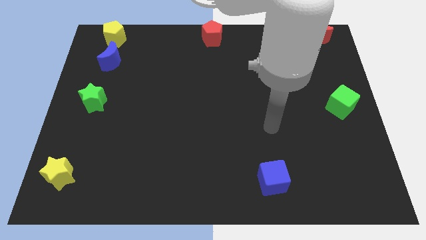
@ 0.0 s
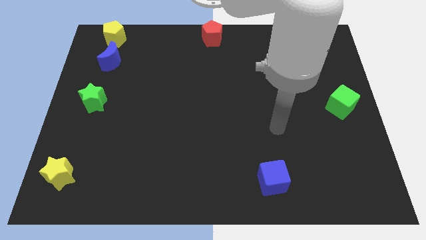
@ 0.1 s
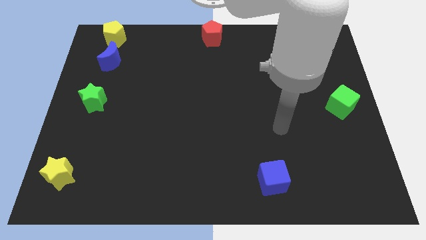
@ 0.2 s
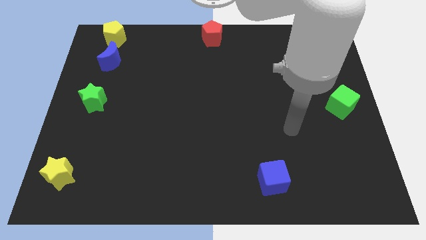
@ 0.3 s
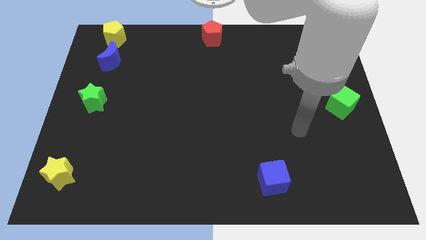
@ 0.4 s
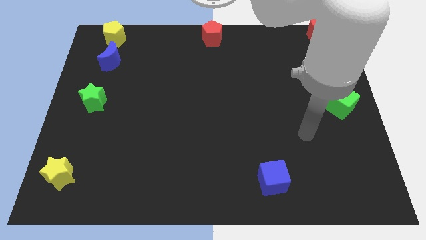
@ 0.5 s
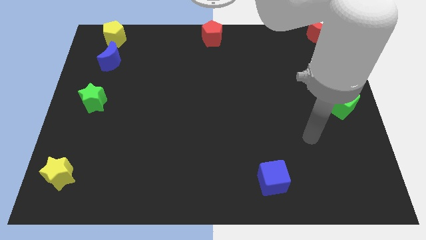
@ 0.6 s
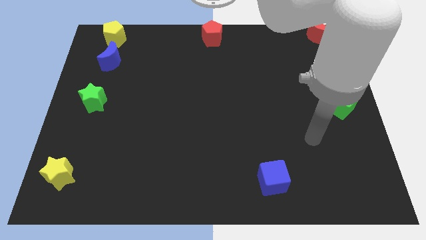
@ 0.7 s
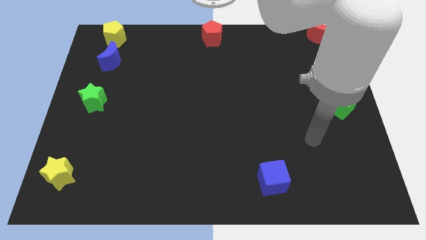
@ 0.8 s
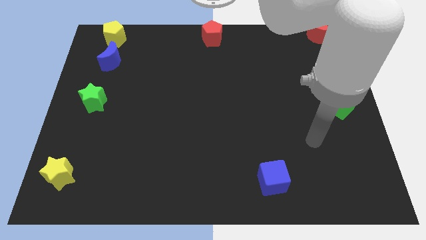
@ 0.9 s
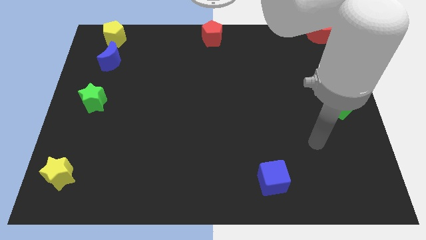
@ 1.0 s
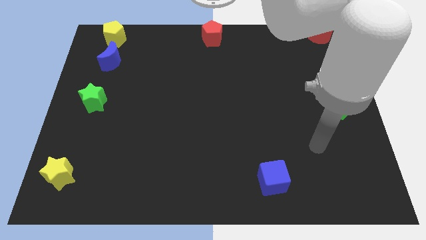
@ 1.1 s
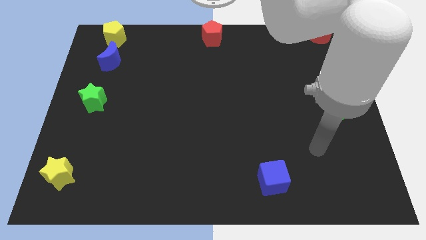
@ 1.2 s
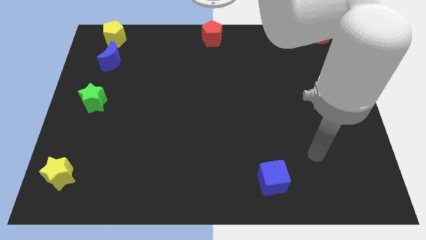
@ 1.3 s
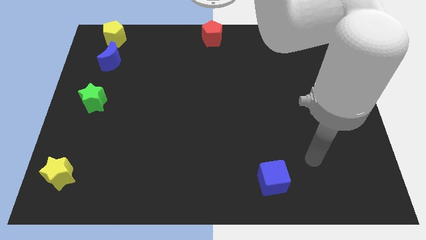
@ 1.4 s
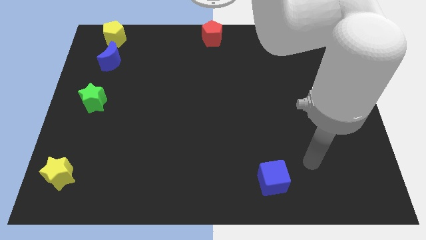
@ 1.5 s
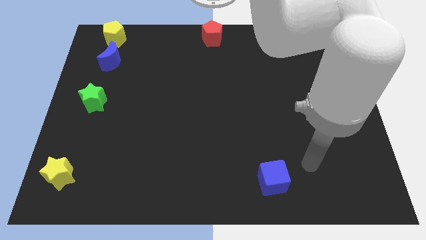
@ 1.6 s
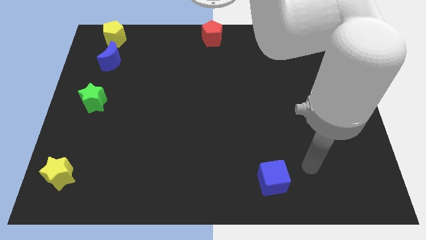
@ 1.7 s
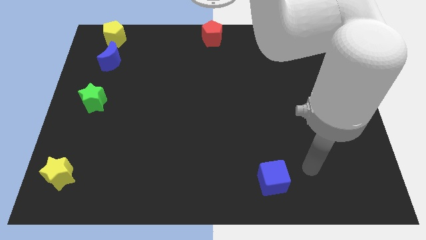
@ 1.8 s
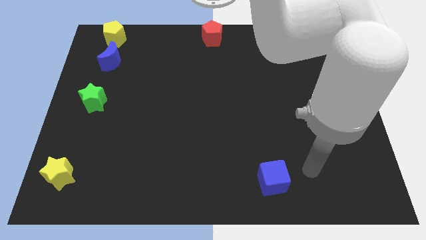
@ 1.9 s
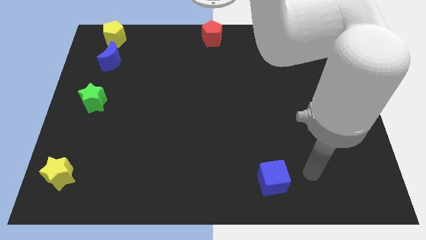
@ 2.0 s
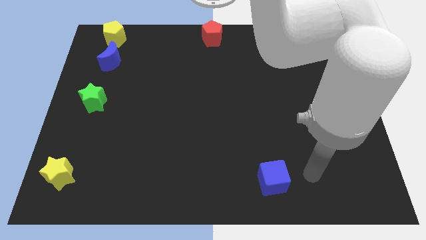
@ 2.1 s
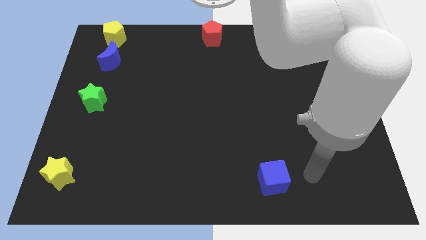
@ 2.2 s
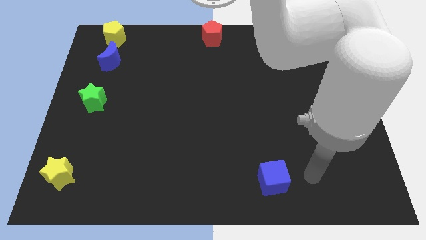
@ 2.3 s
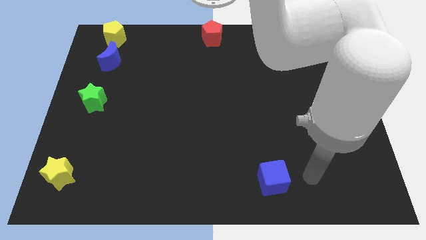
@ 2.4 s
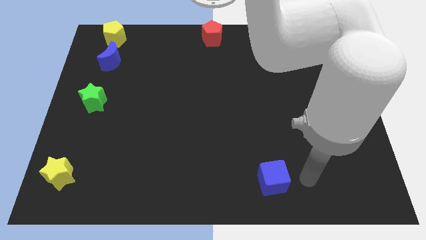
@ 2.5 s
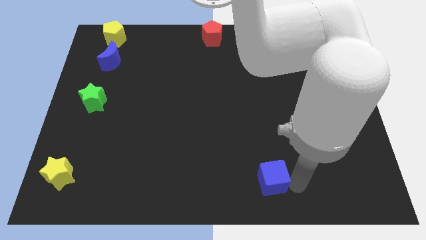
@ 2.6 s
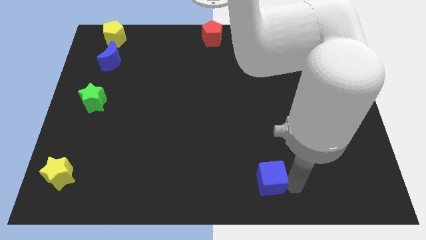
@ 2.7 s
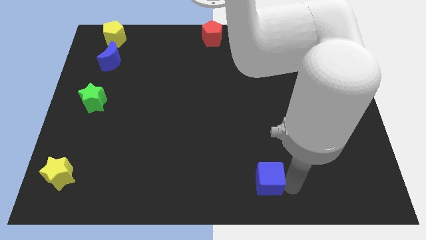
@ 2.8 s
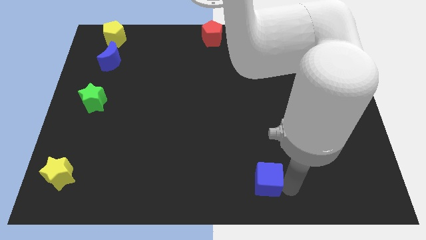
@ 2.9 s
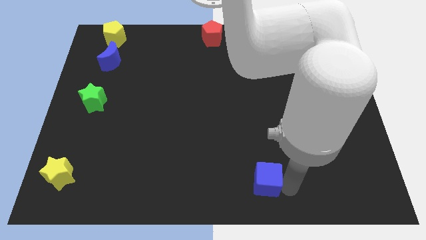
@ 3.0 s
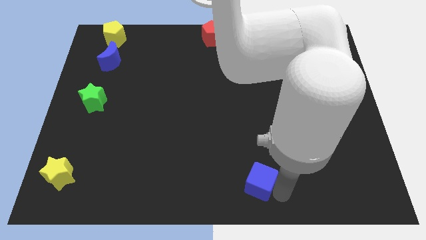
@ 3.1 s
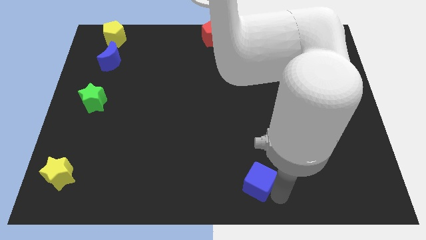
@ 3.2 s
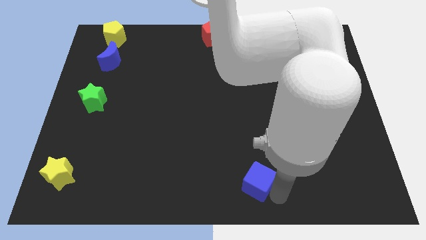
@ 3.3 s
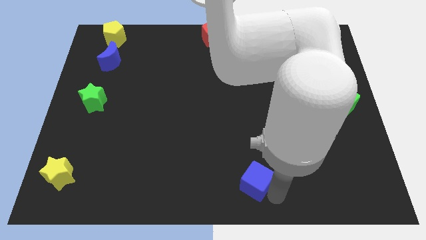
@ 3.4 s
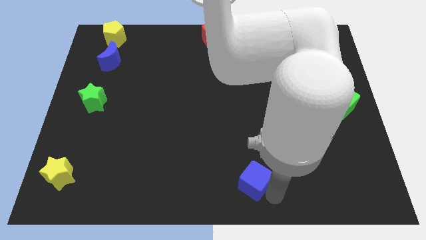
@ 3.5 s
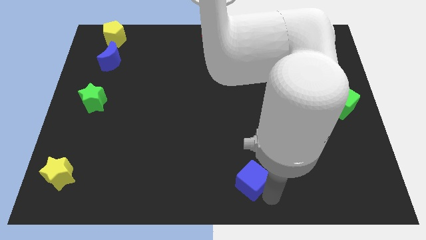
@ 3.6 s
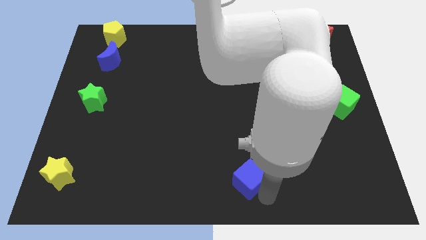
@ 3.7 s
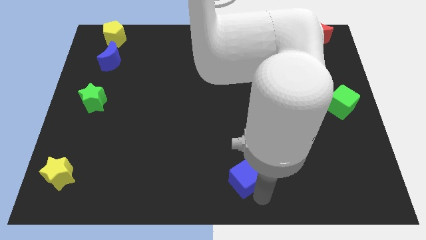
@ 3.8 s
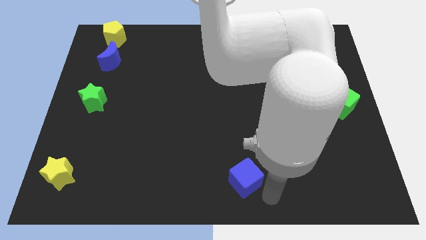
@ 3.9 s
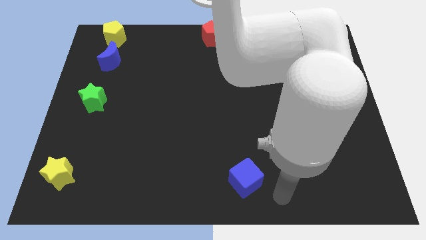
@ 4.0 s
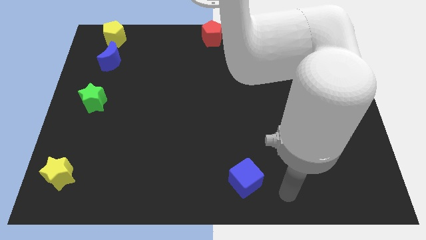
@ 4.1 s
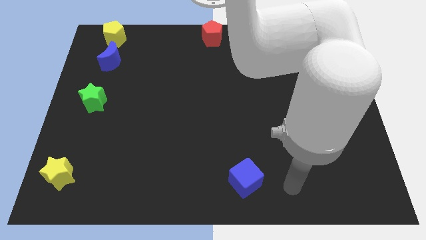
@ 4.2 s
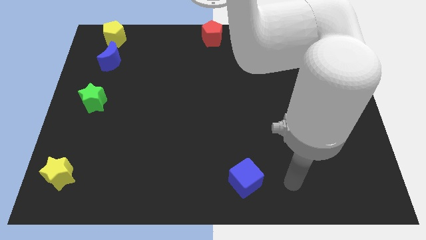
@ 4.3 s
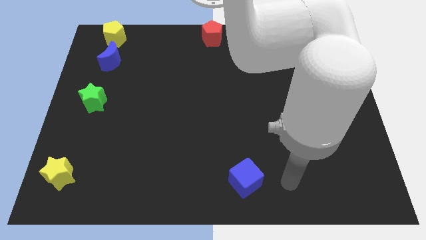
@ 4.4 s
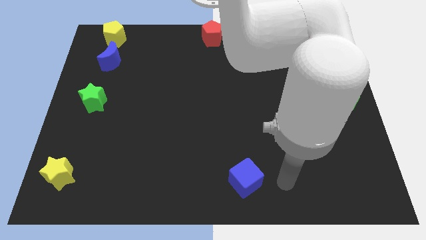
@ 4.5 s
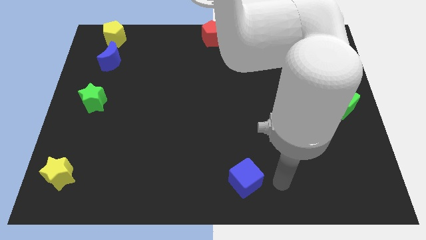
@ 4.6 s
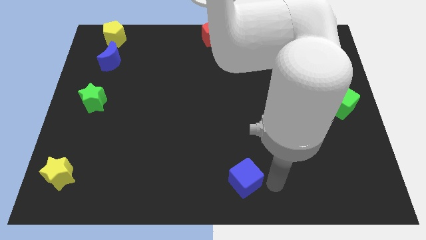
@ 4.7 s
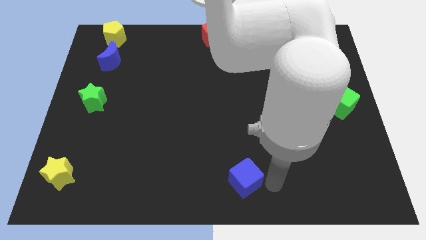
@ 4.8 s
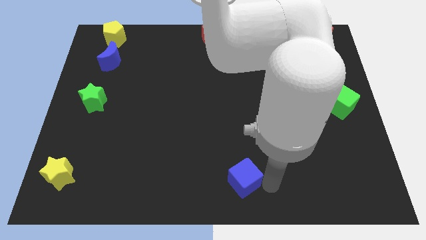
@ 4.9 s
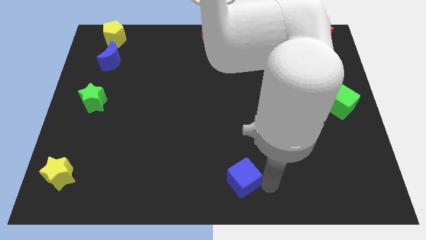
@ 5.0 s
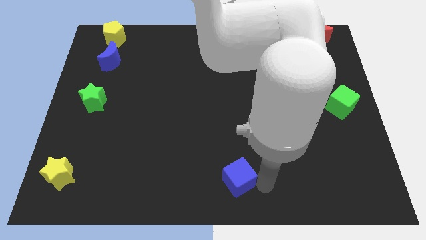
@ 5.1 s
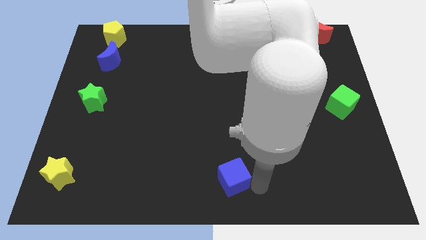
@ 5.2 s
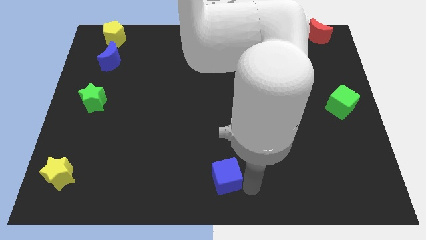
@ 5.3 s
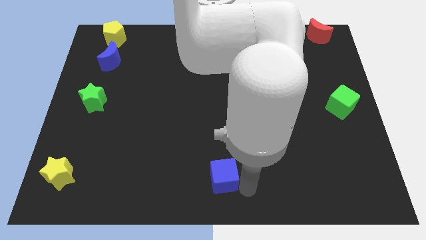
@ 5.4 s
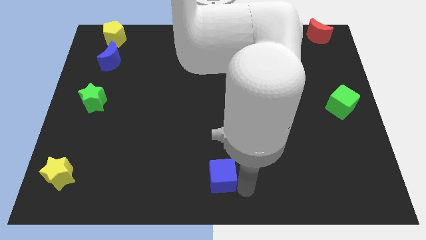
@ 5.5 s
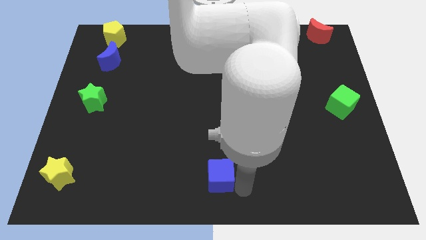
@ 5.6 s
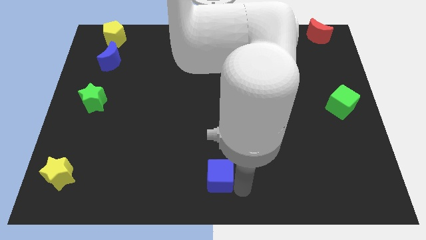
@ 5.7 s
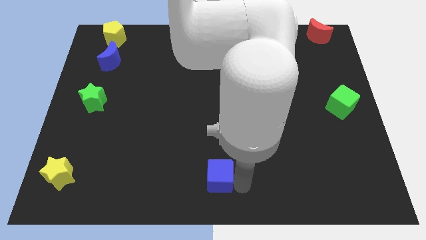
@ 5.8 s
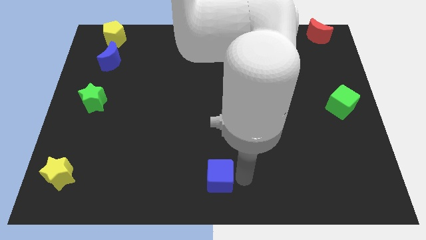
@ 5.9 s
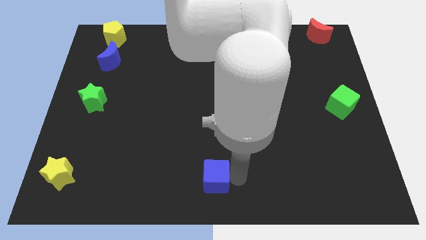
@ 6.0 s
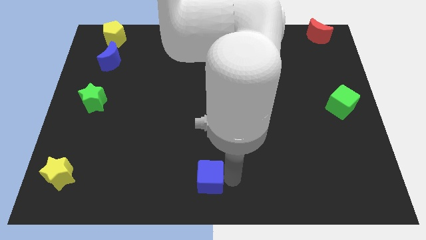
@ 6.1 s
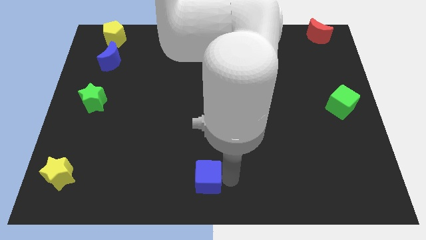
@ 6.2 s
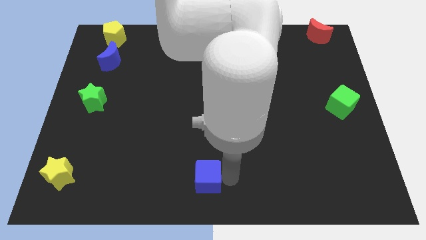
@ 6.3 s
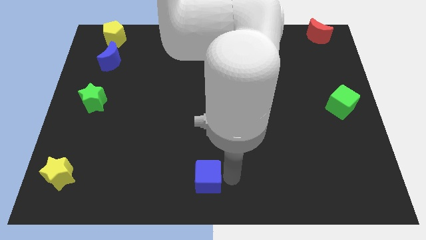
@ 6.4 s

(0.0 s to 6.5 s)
move the blue cube to the bottom center

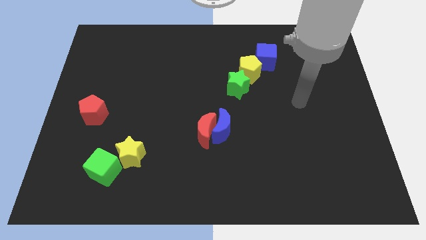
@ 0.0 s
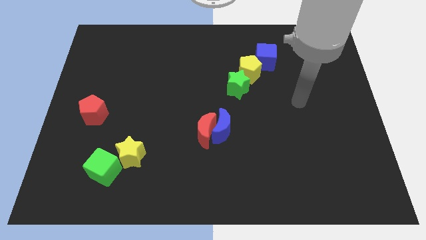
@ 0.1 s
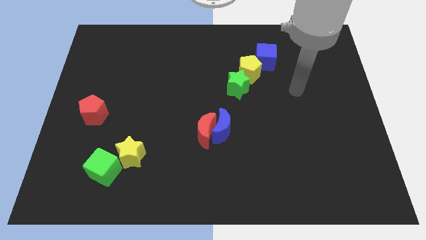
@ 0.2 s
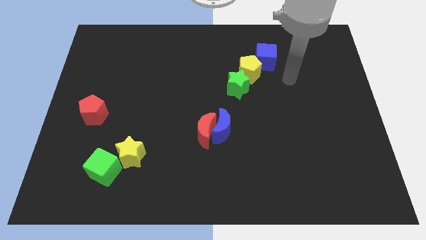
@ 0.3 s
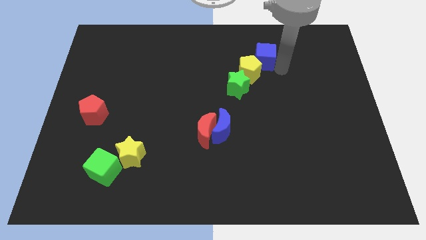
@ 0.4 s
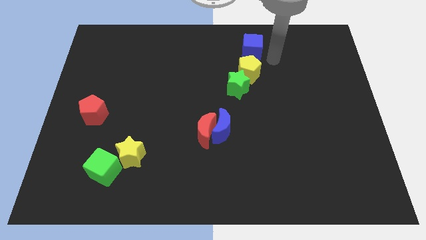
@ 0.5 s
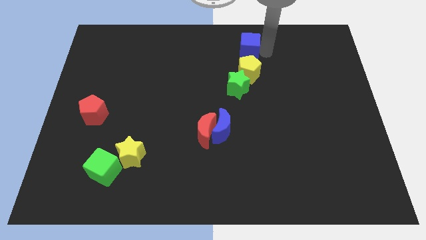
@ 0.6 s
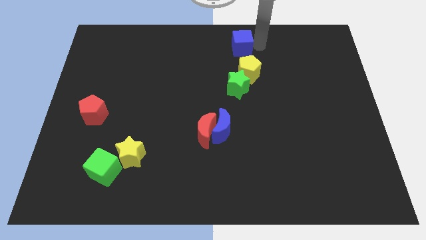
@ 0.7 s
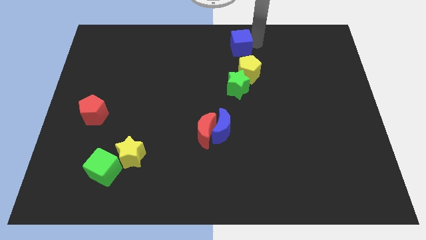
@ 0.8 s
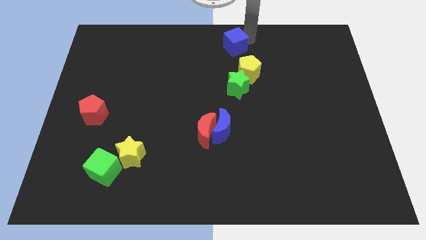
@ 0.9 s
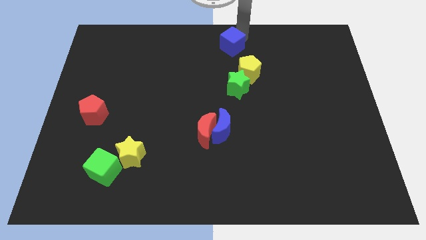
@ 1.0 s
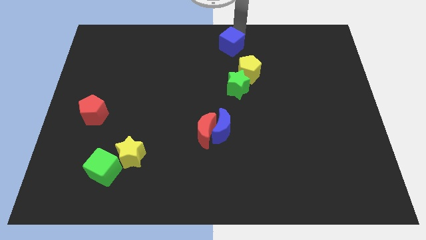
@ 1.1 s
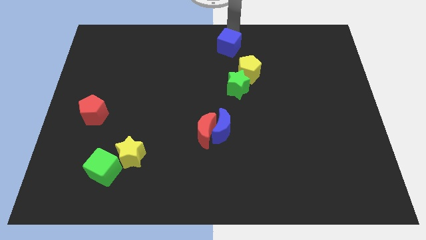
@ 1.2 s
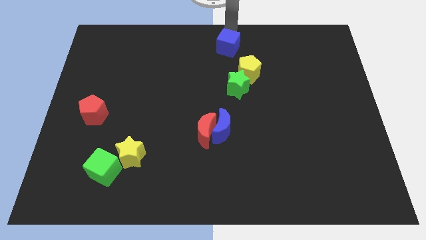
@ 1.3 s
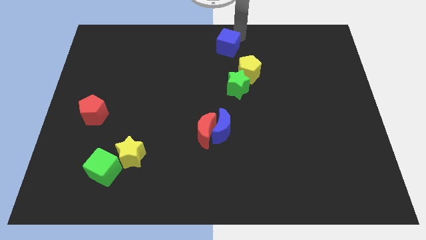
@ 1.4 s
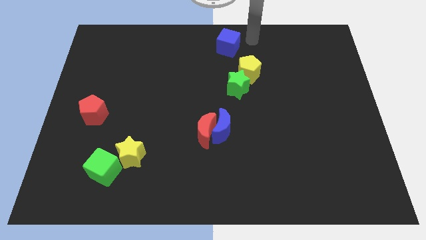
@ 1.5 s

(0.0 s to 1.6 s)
place a blue cube to the top center of the board

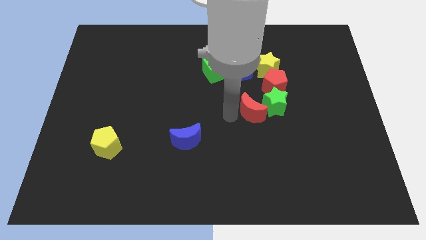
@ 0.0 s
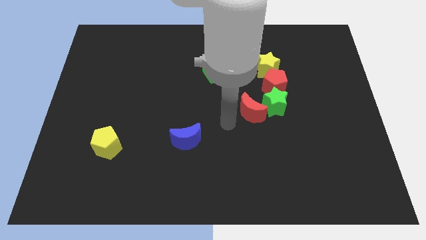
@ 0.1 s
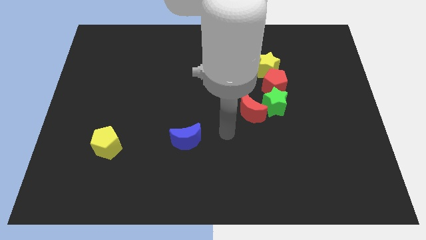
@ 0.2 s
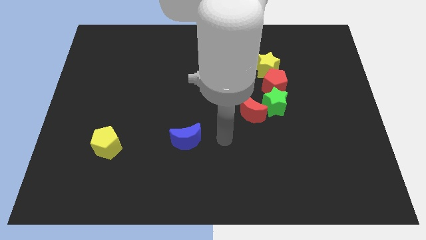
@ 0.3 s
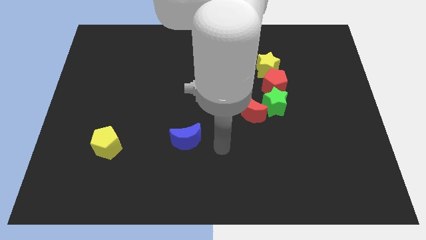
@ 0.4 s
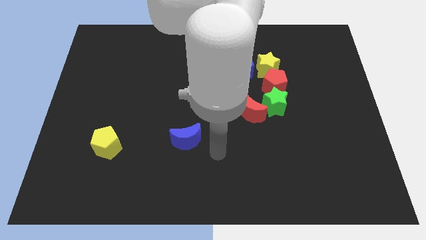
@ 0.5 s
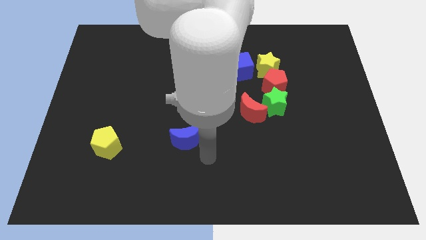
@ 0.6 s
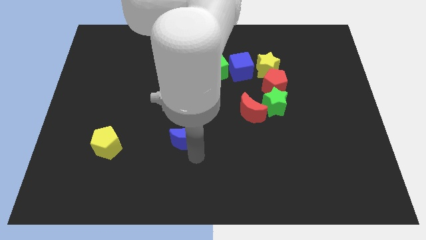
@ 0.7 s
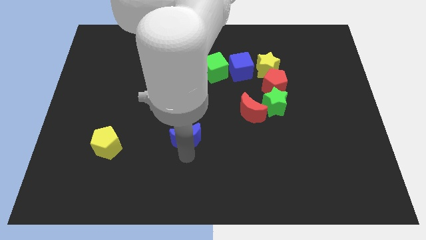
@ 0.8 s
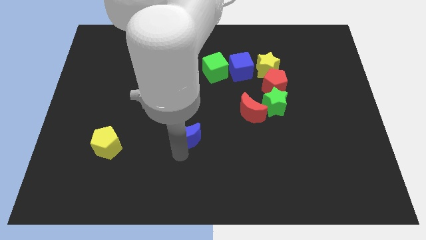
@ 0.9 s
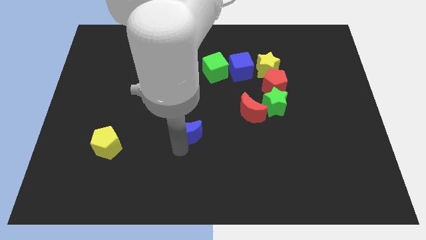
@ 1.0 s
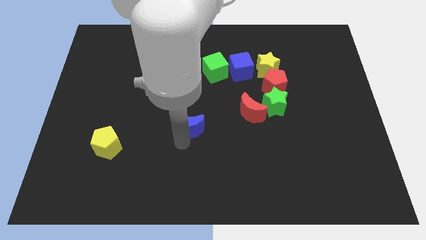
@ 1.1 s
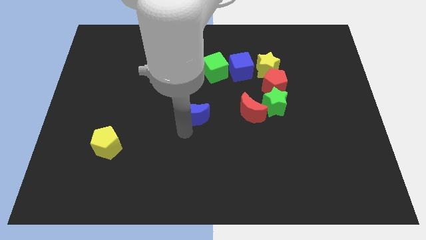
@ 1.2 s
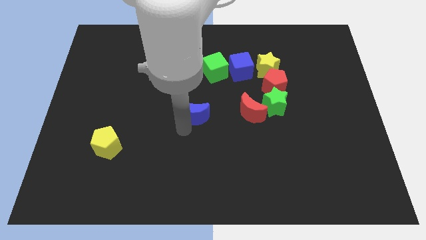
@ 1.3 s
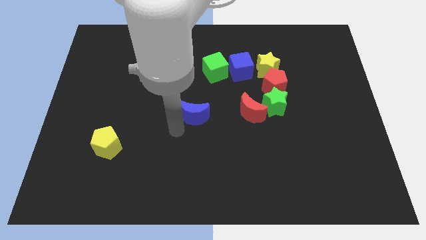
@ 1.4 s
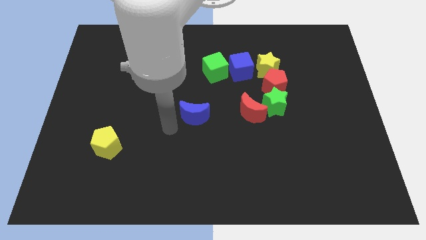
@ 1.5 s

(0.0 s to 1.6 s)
move the blue moon at the left side of the red moon
